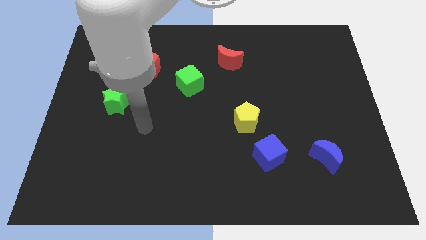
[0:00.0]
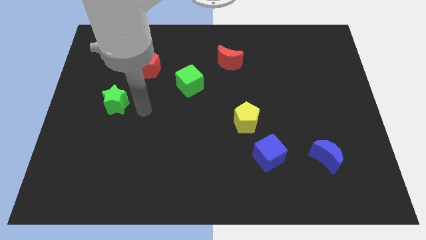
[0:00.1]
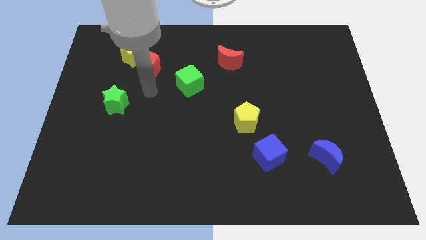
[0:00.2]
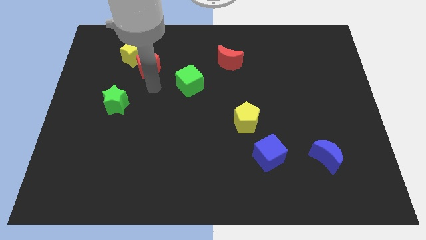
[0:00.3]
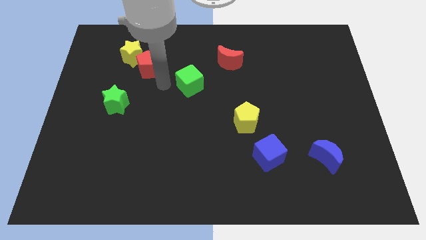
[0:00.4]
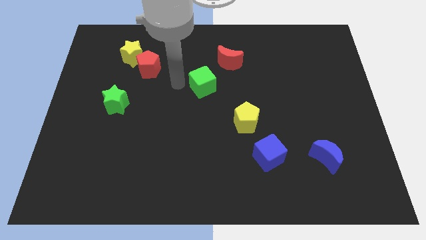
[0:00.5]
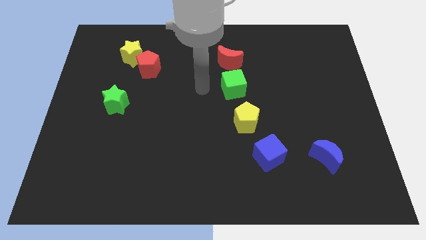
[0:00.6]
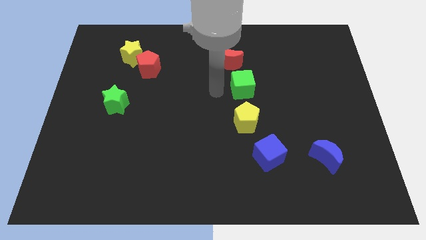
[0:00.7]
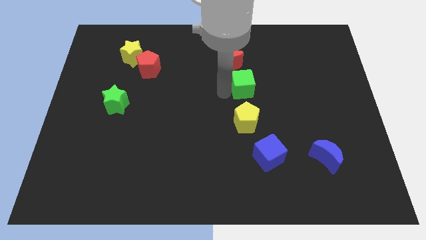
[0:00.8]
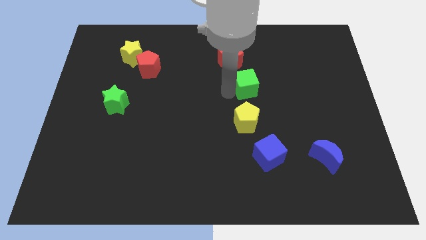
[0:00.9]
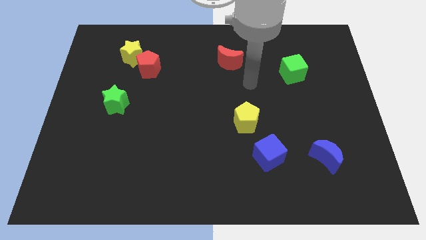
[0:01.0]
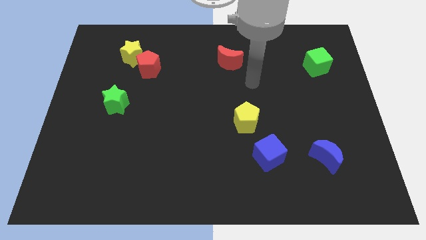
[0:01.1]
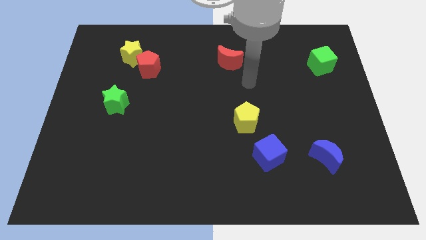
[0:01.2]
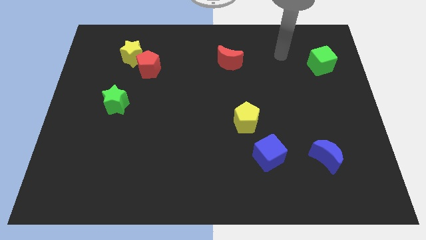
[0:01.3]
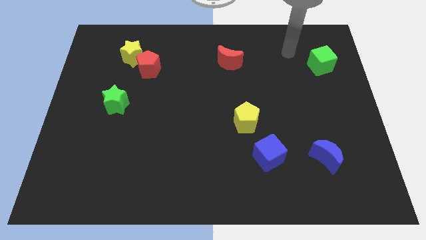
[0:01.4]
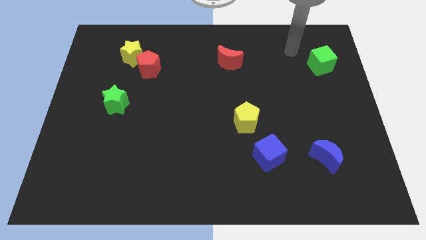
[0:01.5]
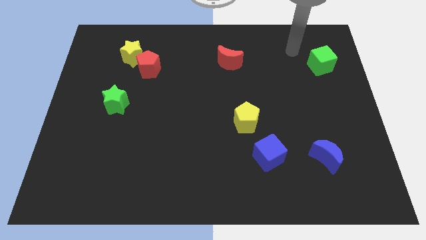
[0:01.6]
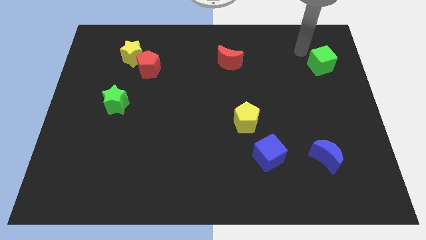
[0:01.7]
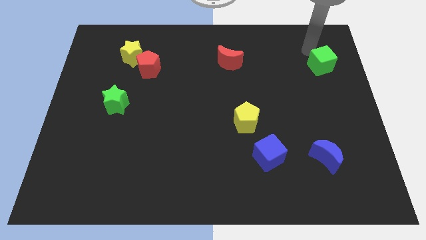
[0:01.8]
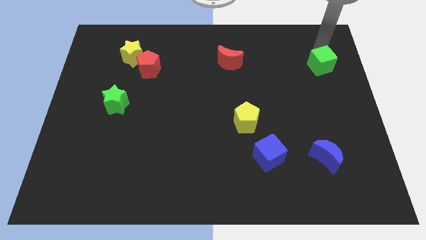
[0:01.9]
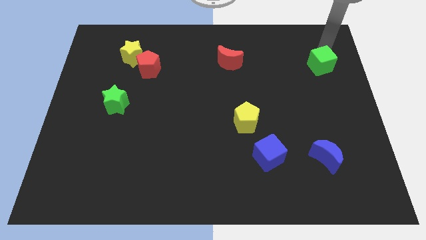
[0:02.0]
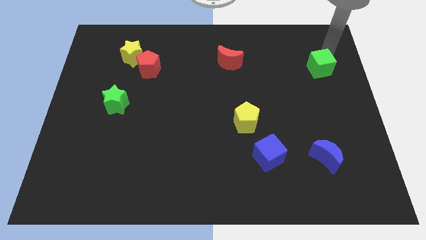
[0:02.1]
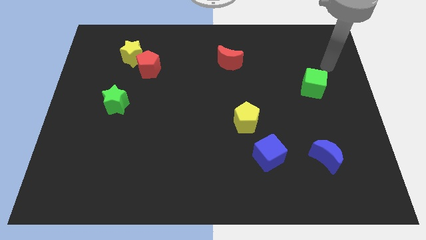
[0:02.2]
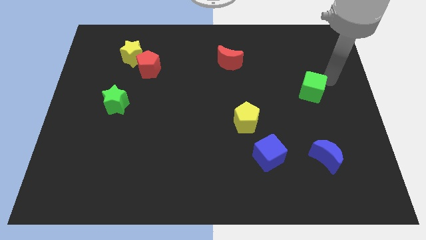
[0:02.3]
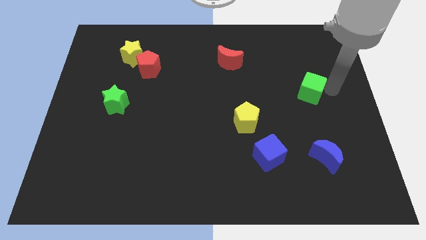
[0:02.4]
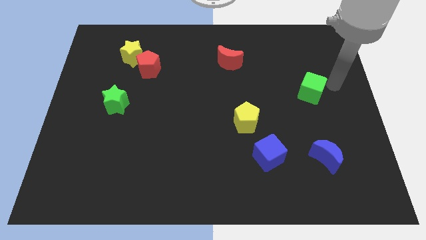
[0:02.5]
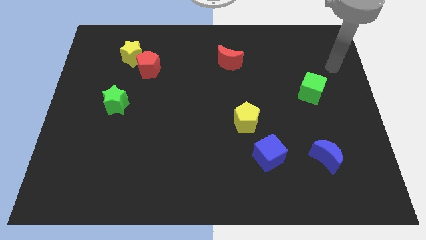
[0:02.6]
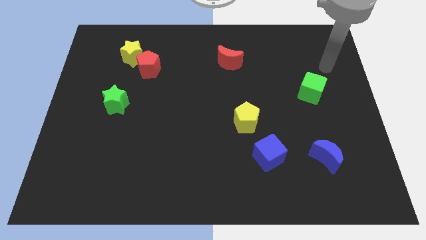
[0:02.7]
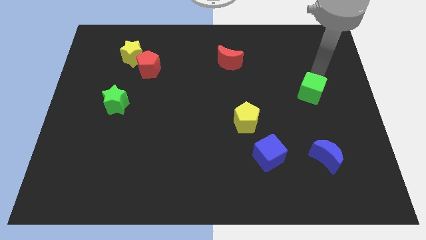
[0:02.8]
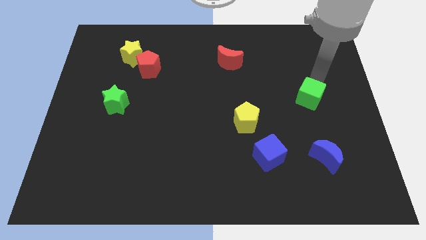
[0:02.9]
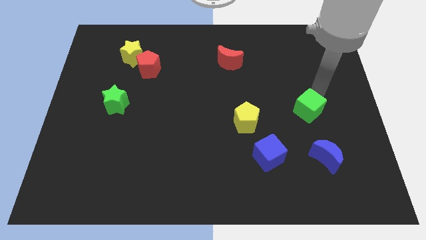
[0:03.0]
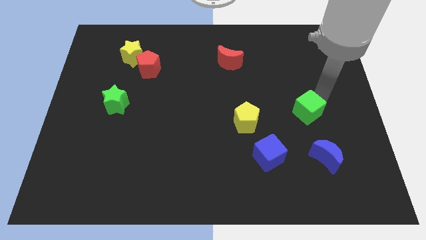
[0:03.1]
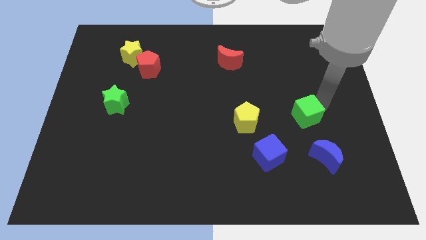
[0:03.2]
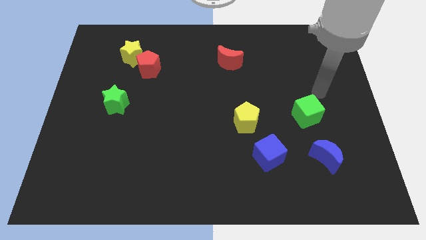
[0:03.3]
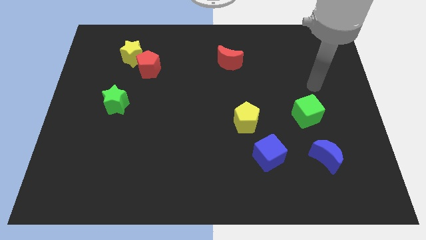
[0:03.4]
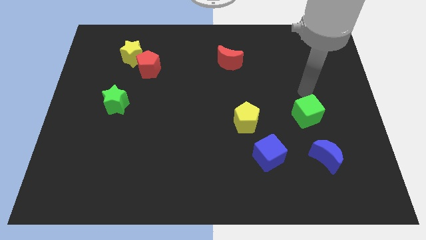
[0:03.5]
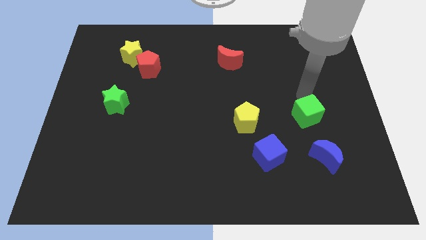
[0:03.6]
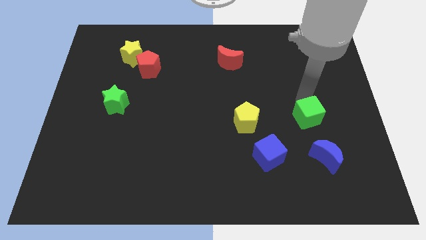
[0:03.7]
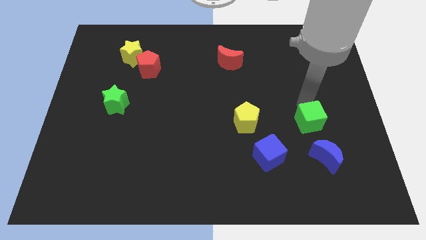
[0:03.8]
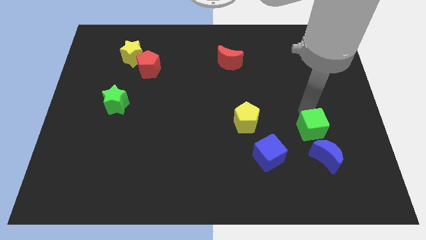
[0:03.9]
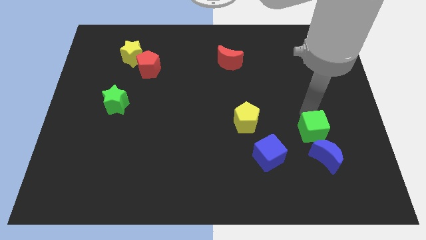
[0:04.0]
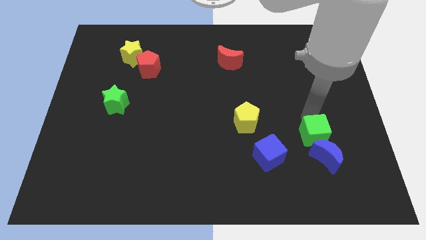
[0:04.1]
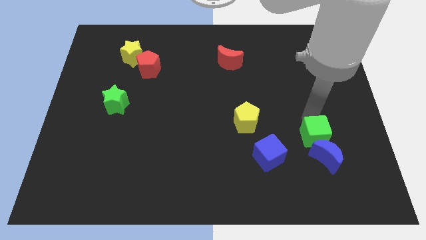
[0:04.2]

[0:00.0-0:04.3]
push the green cube close to the blue moon

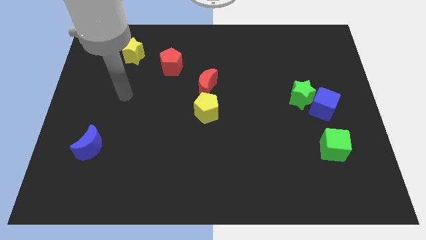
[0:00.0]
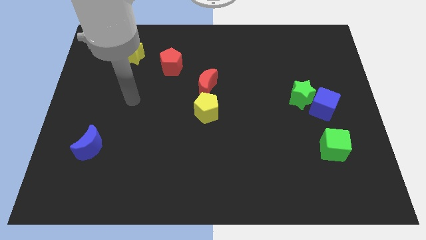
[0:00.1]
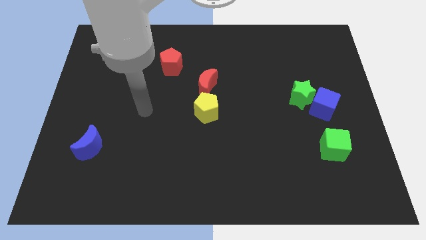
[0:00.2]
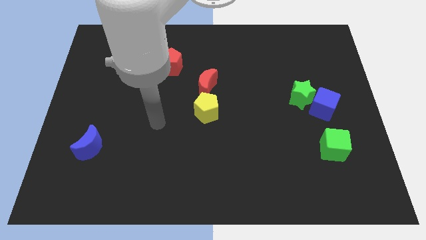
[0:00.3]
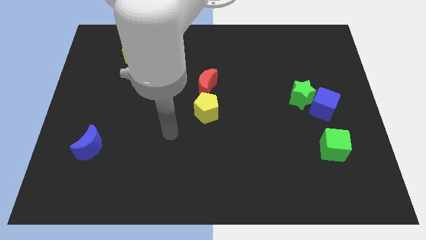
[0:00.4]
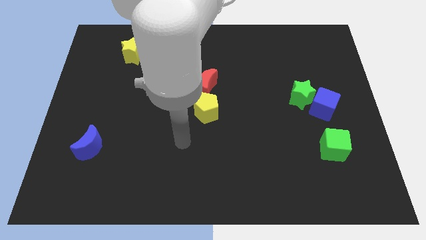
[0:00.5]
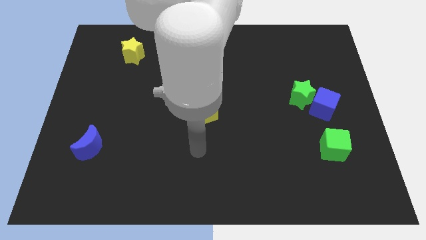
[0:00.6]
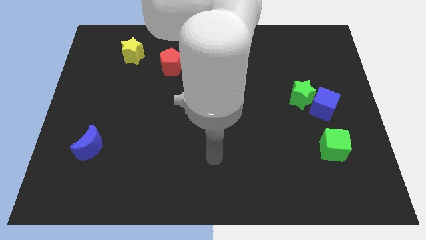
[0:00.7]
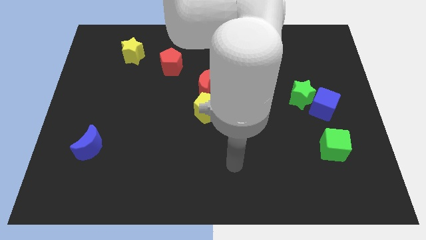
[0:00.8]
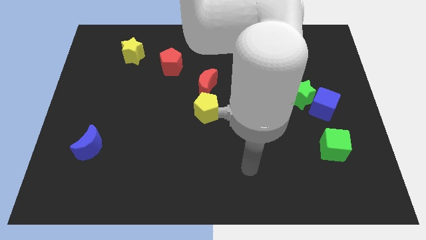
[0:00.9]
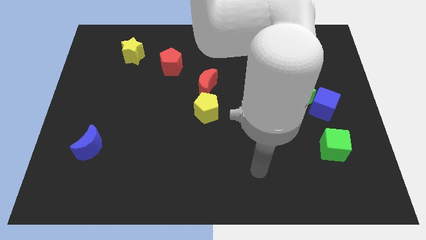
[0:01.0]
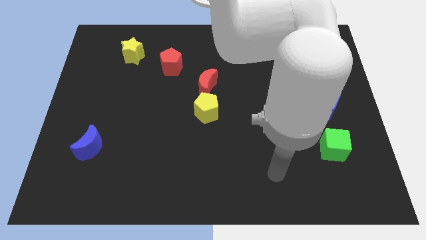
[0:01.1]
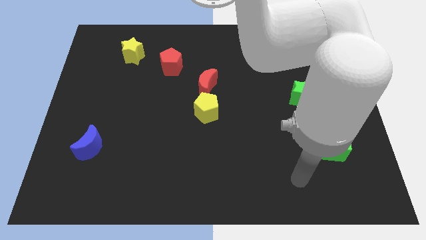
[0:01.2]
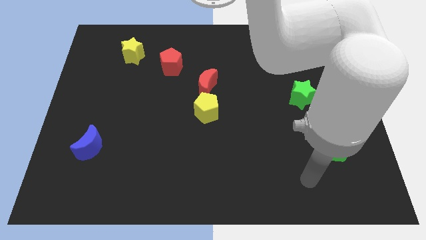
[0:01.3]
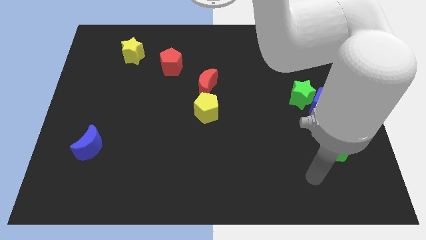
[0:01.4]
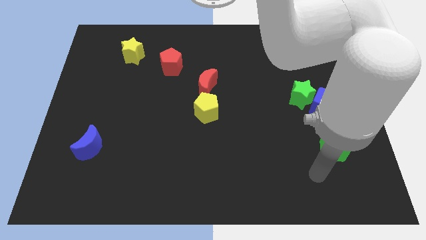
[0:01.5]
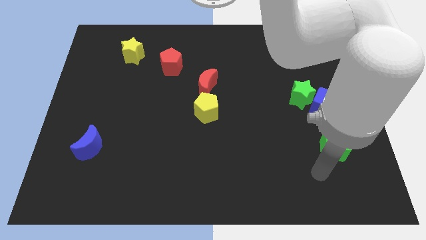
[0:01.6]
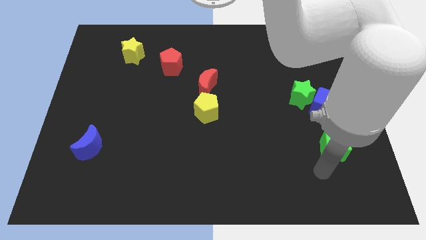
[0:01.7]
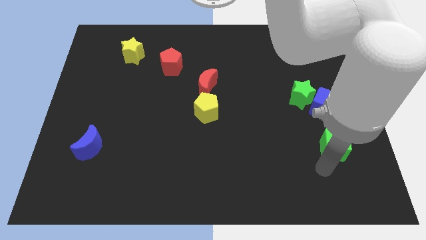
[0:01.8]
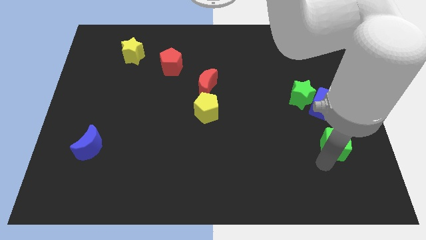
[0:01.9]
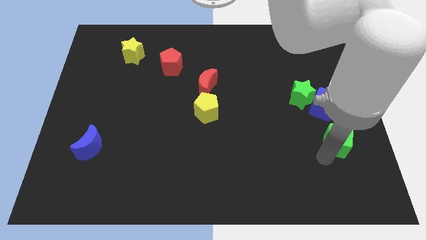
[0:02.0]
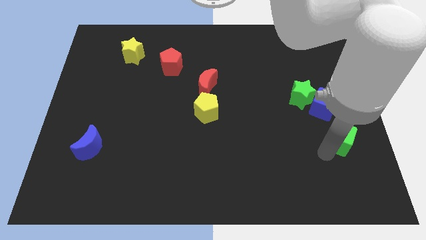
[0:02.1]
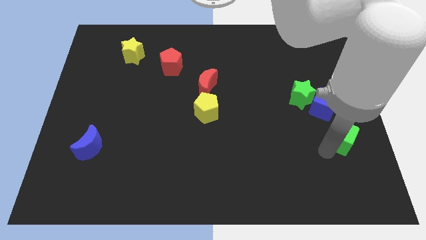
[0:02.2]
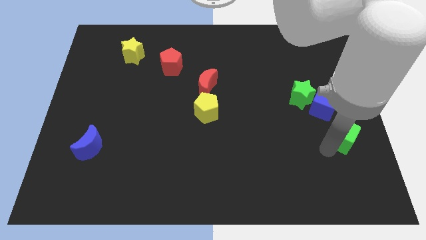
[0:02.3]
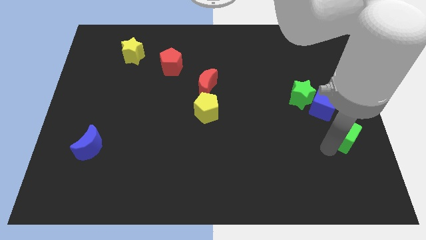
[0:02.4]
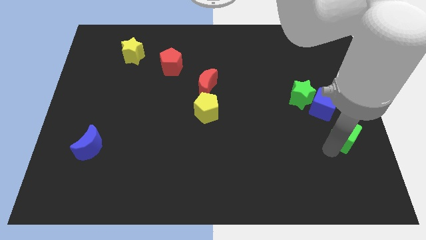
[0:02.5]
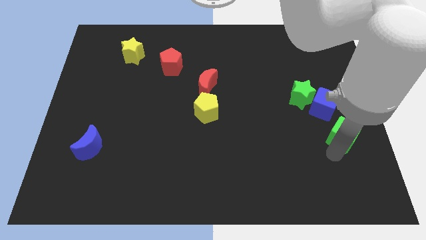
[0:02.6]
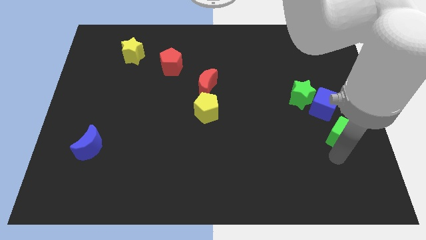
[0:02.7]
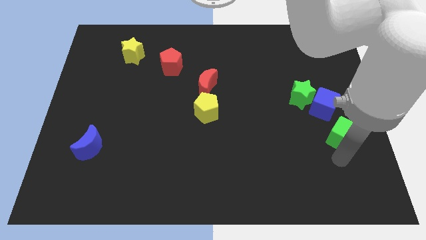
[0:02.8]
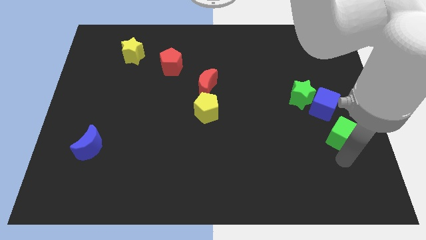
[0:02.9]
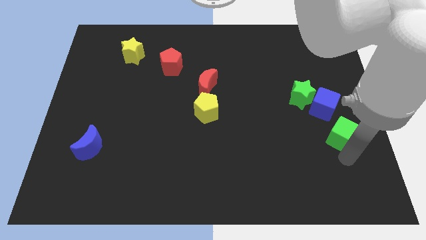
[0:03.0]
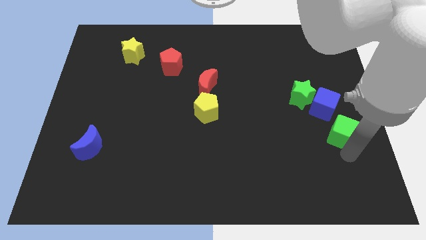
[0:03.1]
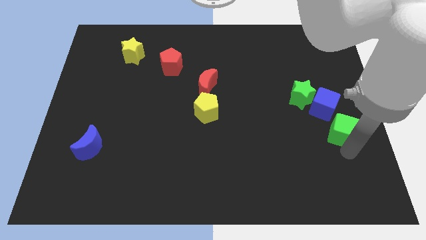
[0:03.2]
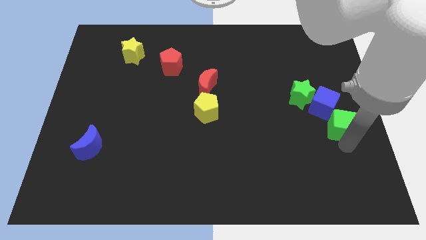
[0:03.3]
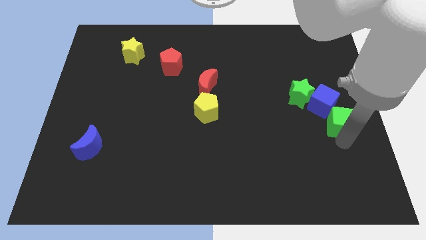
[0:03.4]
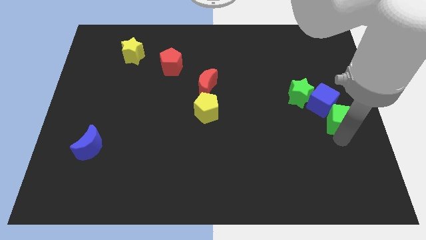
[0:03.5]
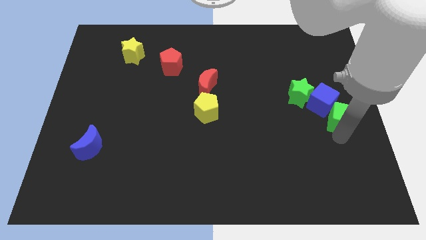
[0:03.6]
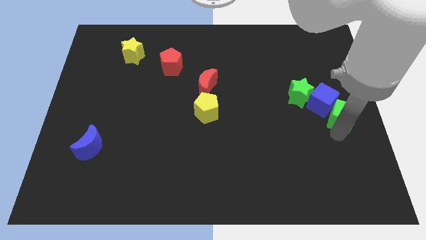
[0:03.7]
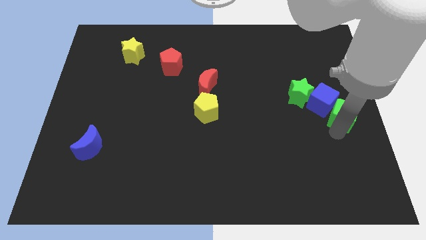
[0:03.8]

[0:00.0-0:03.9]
push the green cube next to the blue cube

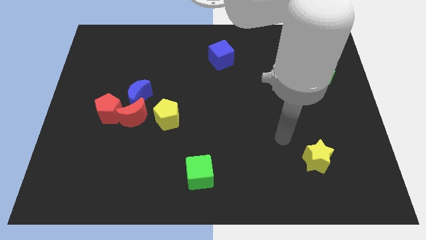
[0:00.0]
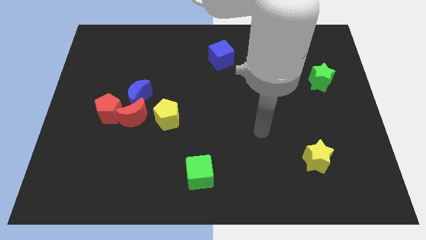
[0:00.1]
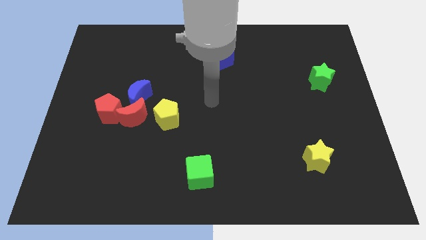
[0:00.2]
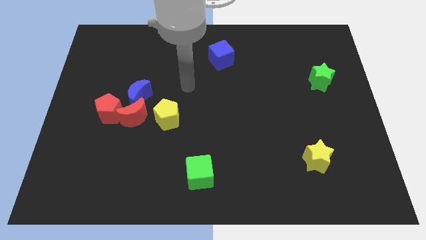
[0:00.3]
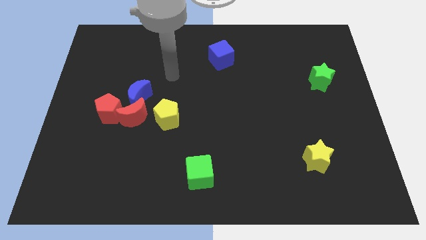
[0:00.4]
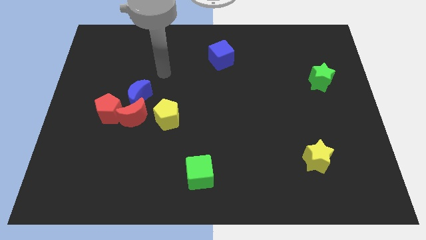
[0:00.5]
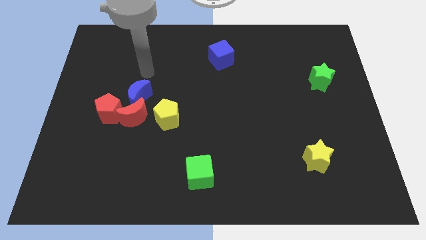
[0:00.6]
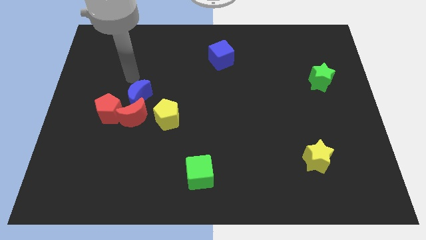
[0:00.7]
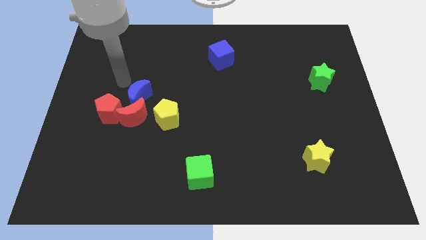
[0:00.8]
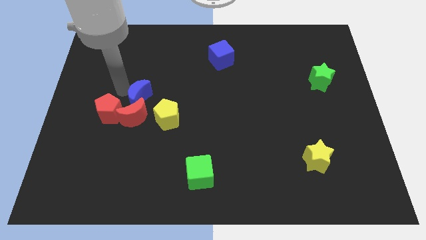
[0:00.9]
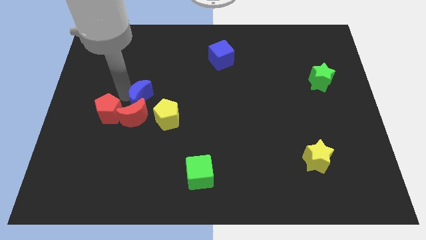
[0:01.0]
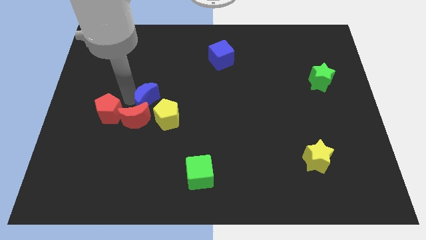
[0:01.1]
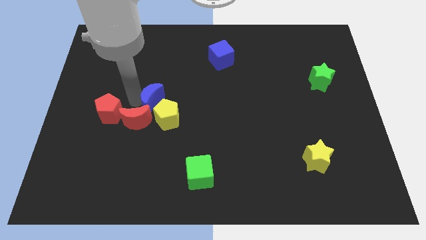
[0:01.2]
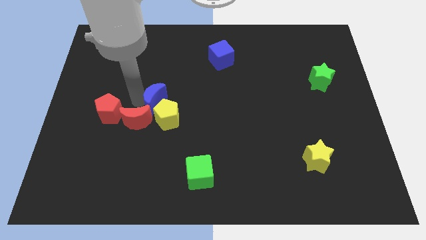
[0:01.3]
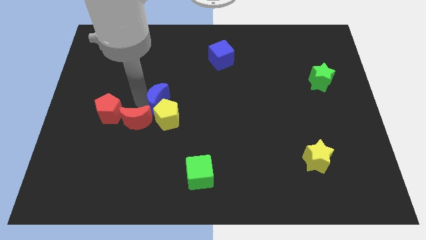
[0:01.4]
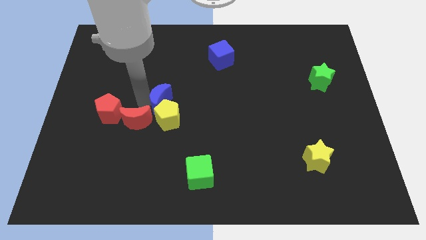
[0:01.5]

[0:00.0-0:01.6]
push the blue moon close to the yellow pentagon
